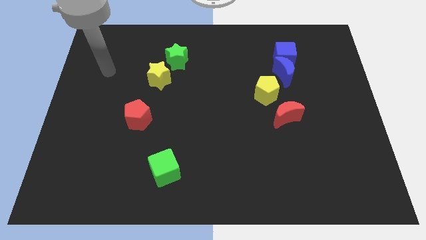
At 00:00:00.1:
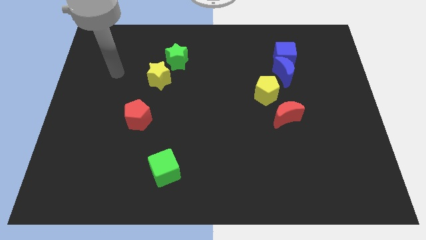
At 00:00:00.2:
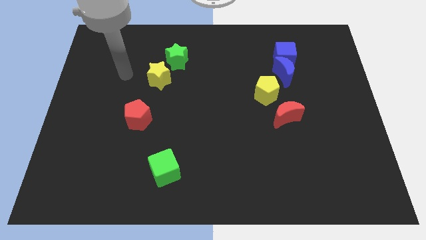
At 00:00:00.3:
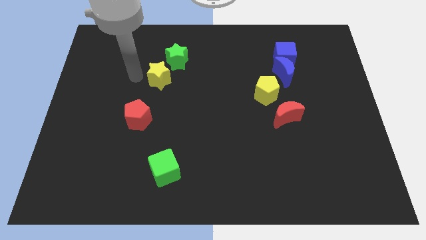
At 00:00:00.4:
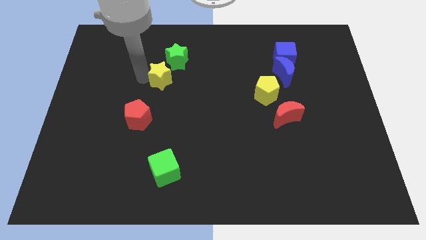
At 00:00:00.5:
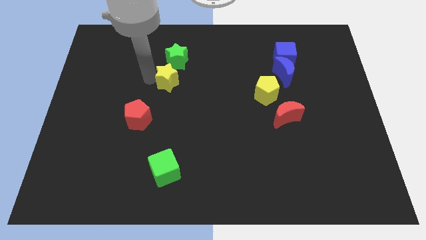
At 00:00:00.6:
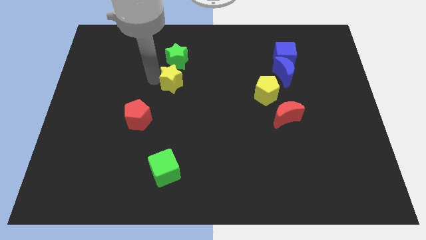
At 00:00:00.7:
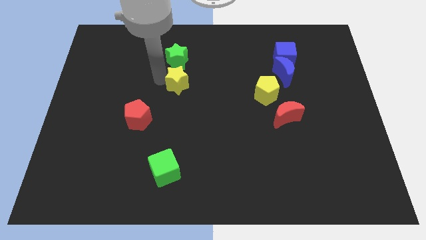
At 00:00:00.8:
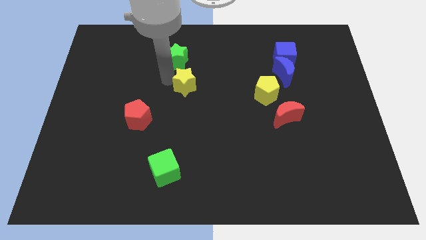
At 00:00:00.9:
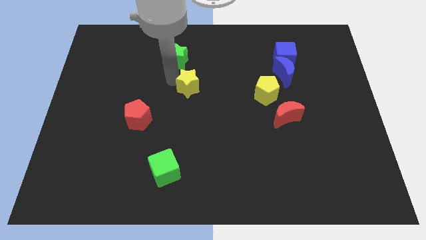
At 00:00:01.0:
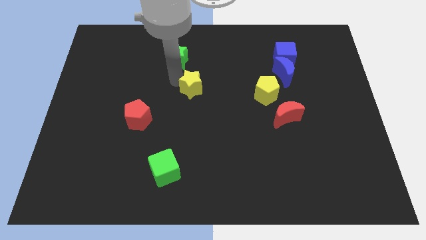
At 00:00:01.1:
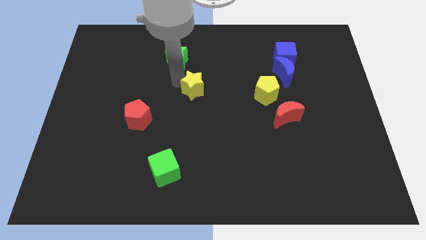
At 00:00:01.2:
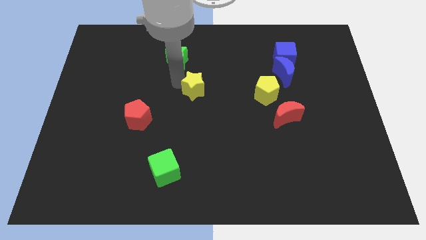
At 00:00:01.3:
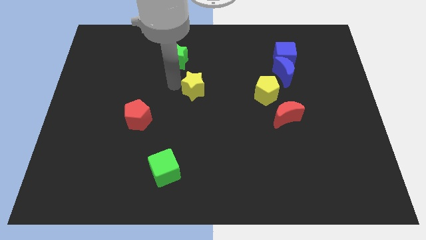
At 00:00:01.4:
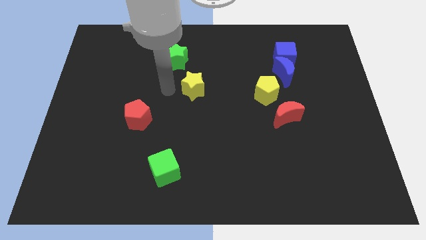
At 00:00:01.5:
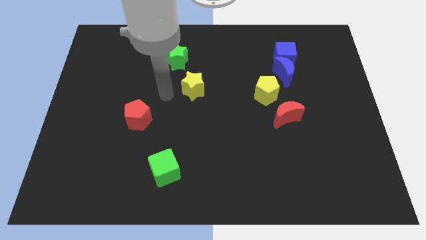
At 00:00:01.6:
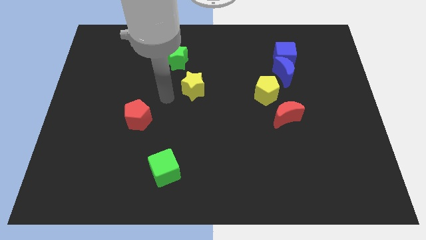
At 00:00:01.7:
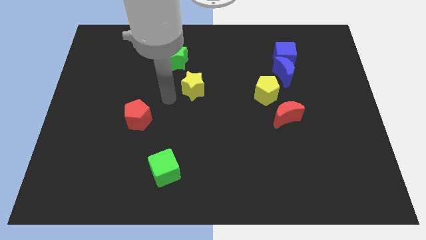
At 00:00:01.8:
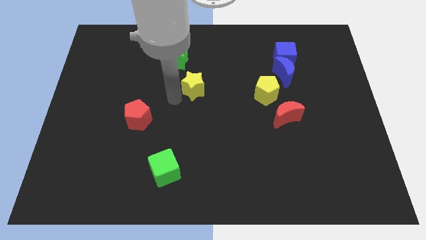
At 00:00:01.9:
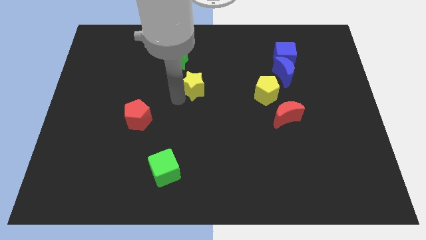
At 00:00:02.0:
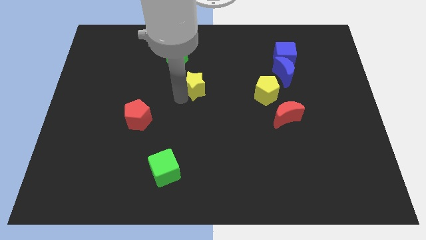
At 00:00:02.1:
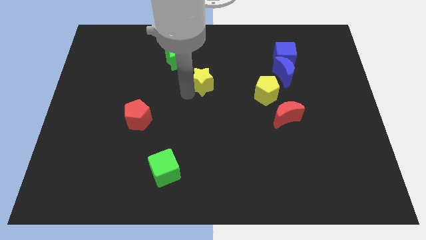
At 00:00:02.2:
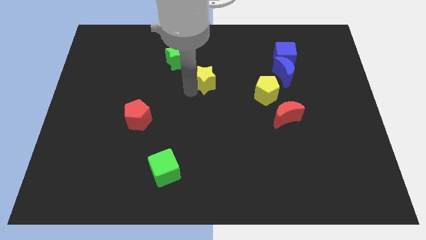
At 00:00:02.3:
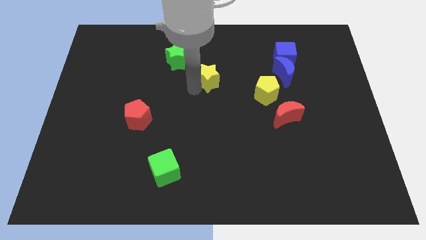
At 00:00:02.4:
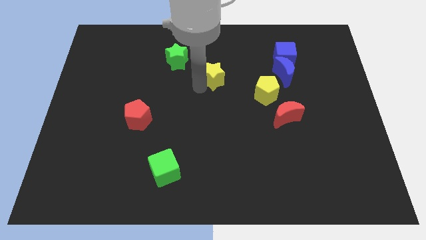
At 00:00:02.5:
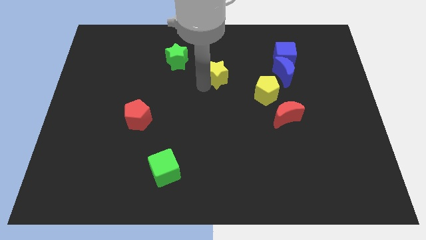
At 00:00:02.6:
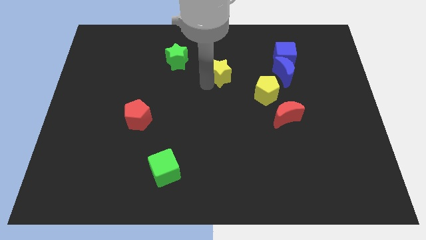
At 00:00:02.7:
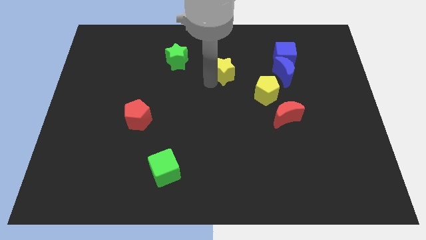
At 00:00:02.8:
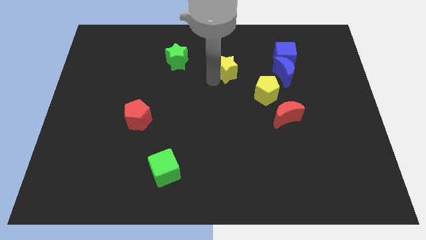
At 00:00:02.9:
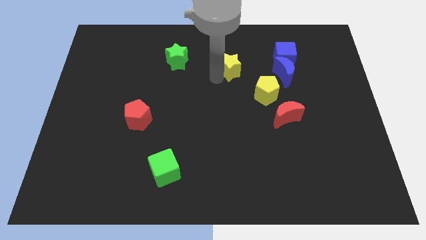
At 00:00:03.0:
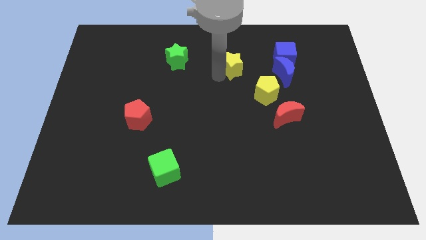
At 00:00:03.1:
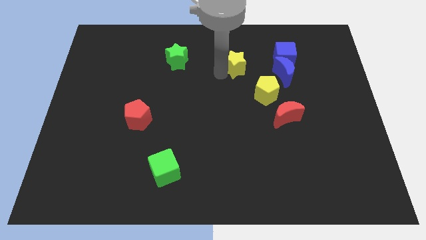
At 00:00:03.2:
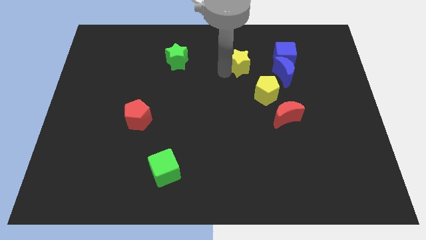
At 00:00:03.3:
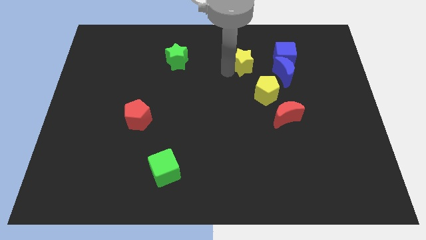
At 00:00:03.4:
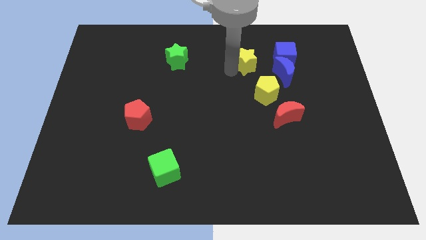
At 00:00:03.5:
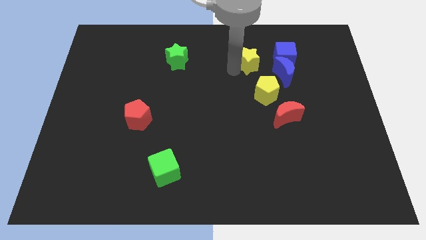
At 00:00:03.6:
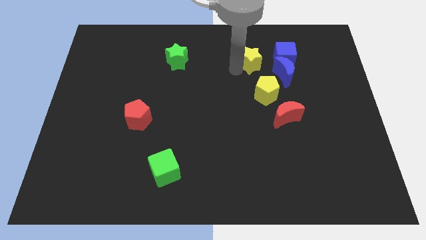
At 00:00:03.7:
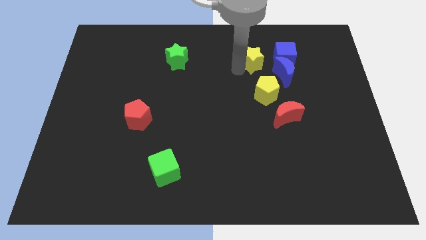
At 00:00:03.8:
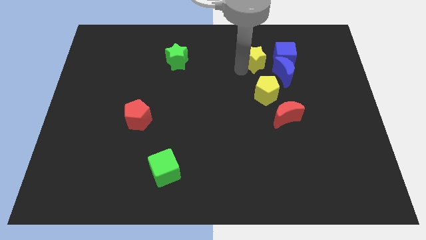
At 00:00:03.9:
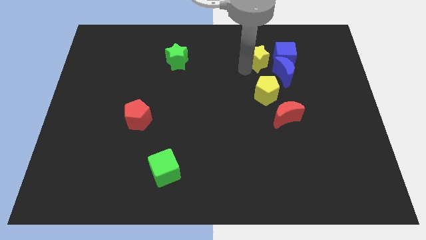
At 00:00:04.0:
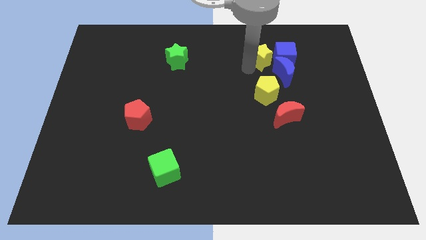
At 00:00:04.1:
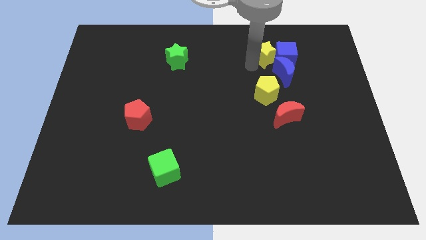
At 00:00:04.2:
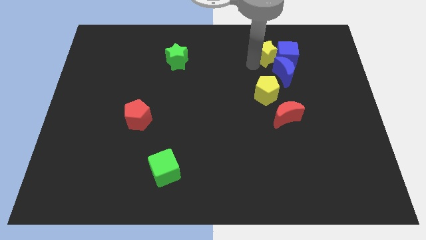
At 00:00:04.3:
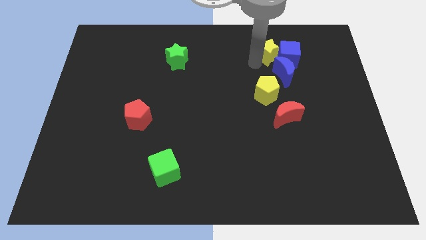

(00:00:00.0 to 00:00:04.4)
move the yellow star to the blue cube

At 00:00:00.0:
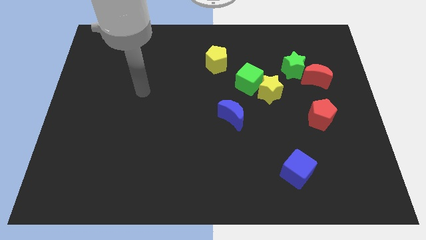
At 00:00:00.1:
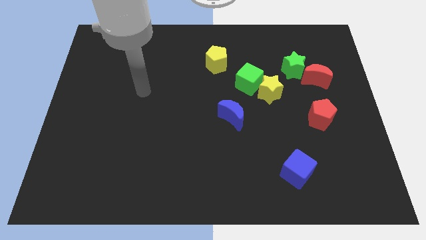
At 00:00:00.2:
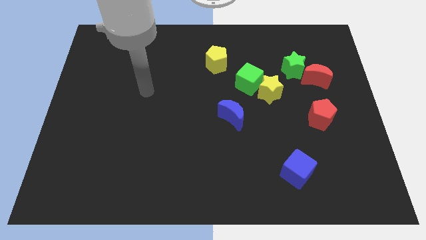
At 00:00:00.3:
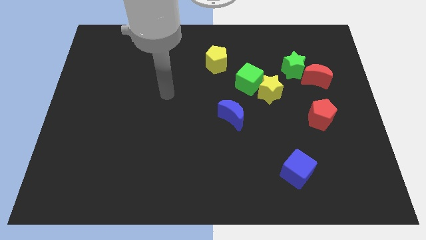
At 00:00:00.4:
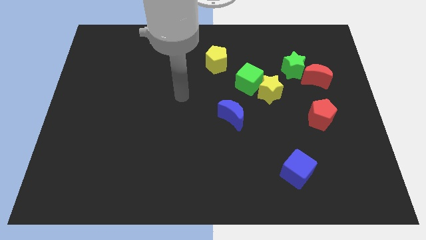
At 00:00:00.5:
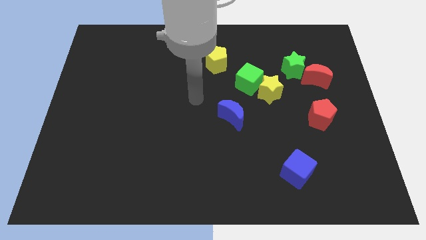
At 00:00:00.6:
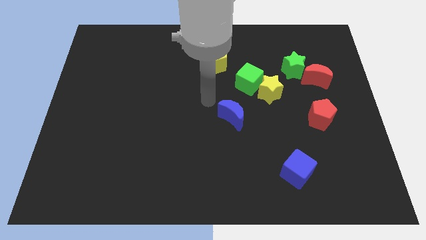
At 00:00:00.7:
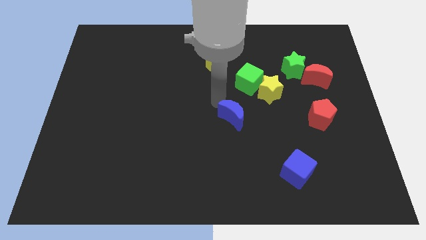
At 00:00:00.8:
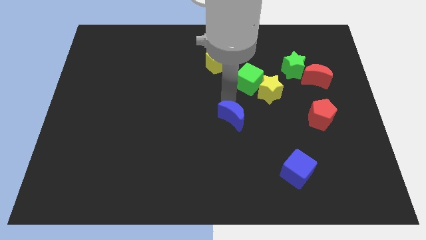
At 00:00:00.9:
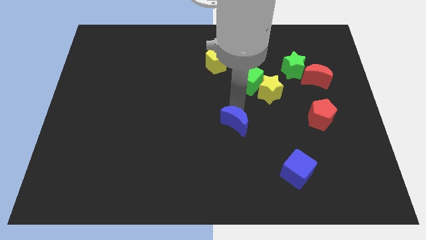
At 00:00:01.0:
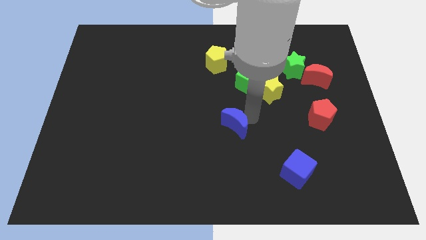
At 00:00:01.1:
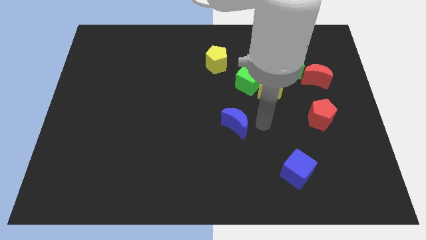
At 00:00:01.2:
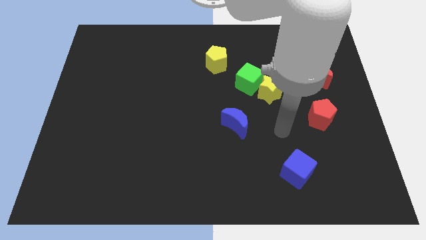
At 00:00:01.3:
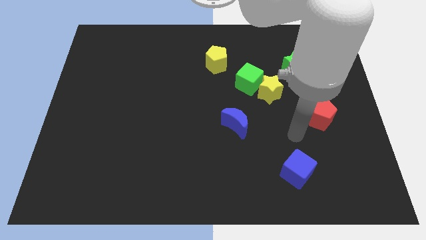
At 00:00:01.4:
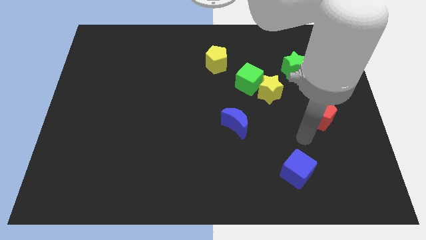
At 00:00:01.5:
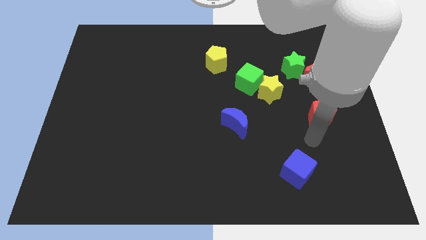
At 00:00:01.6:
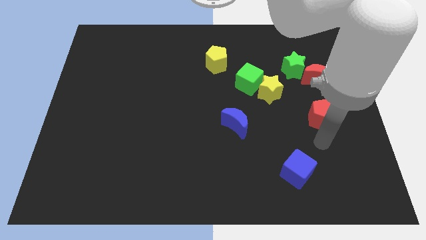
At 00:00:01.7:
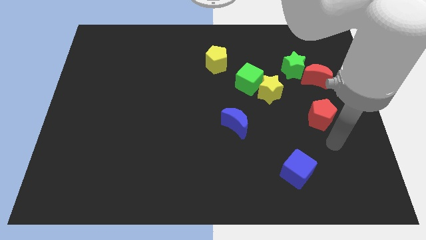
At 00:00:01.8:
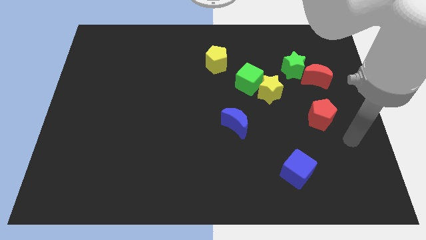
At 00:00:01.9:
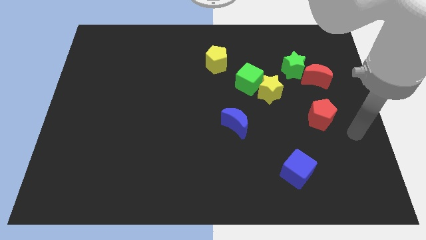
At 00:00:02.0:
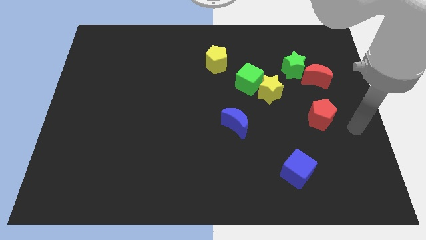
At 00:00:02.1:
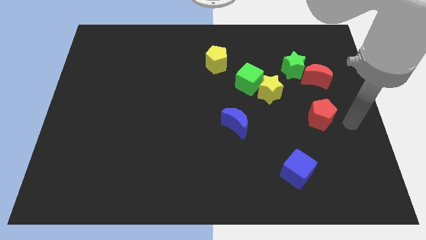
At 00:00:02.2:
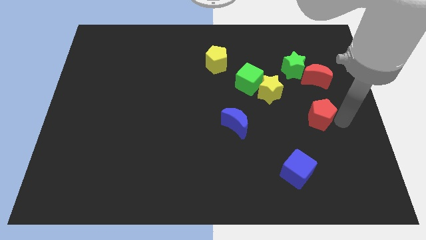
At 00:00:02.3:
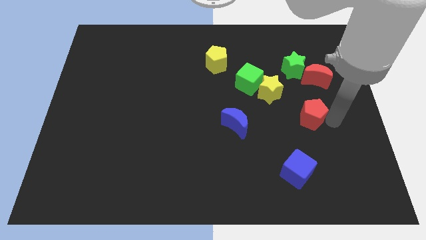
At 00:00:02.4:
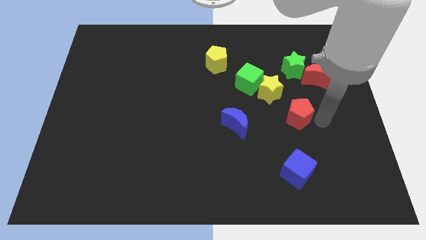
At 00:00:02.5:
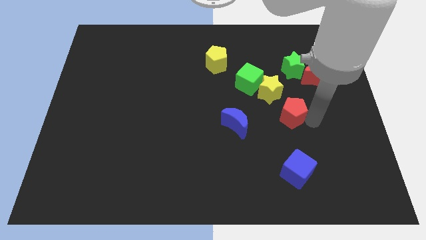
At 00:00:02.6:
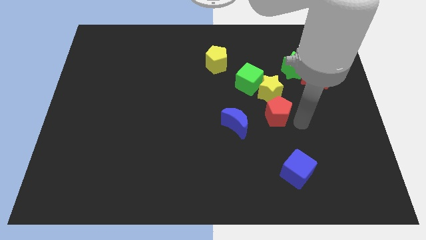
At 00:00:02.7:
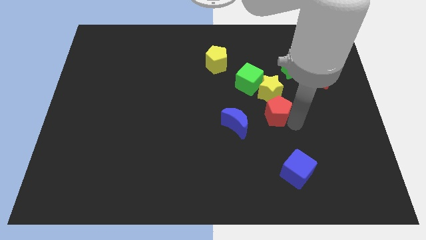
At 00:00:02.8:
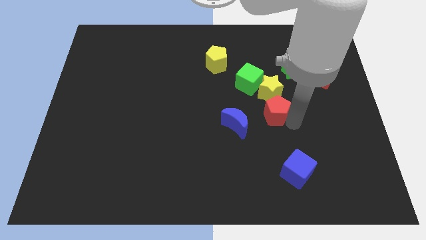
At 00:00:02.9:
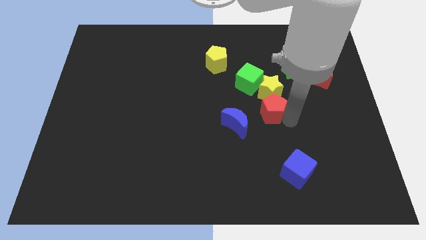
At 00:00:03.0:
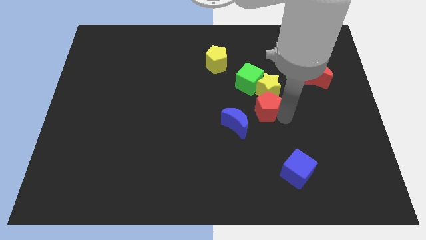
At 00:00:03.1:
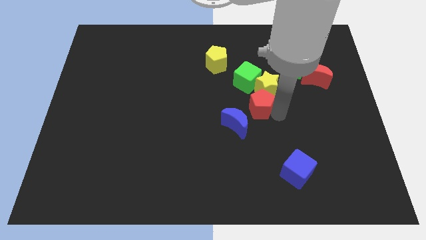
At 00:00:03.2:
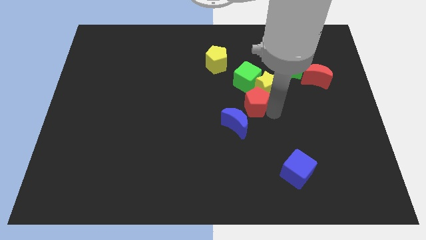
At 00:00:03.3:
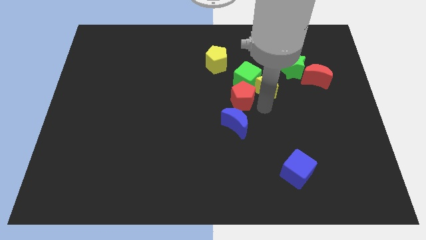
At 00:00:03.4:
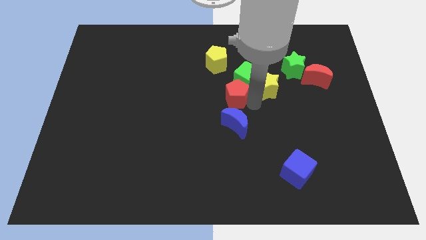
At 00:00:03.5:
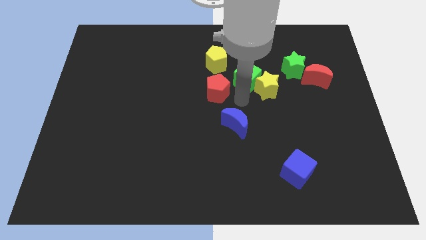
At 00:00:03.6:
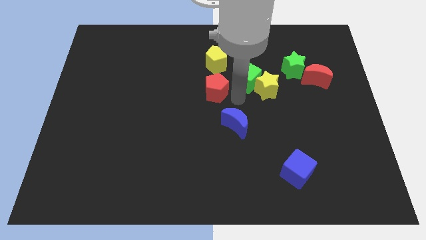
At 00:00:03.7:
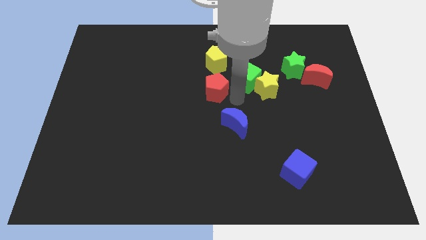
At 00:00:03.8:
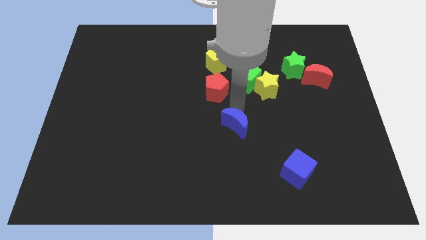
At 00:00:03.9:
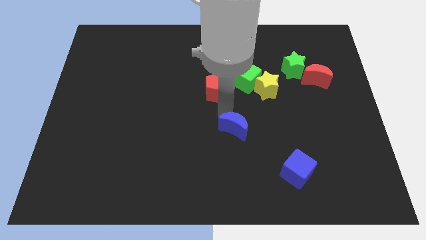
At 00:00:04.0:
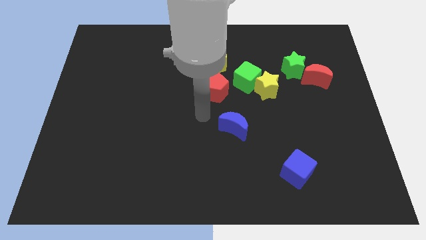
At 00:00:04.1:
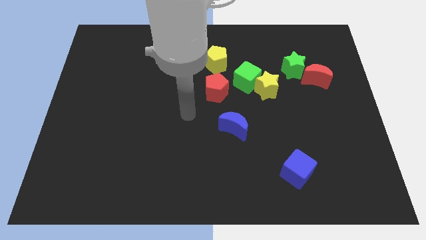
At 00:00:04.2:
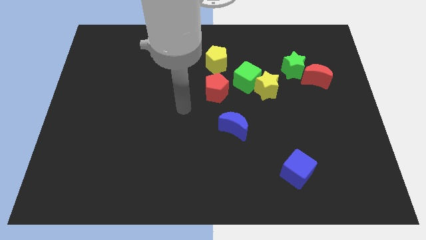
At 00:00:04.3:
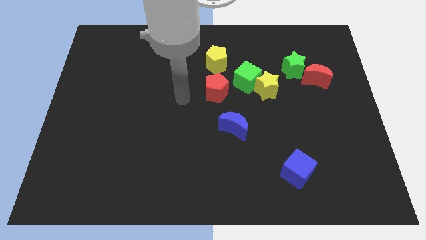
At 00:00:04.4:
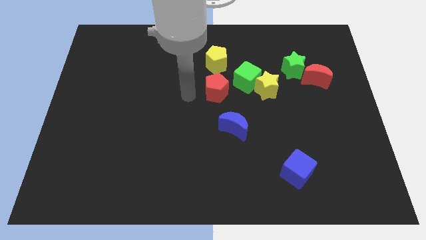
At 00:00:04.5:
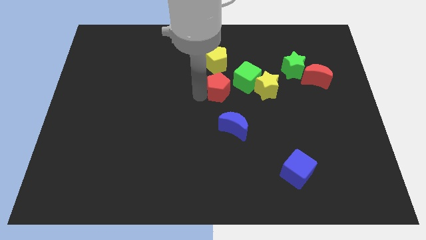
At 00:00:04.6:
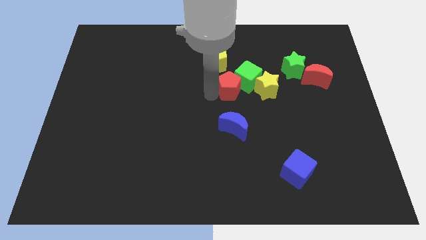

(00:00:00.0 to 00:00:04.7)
slide the red pentagon towards the green cube
